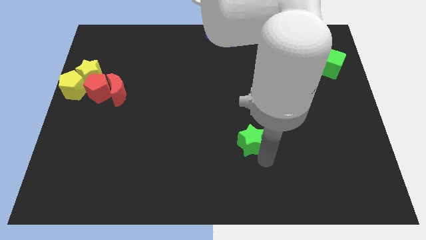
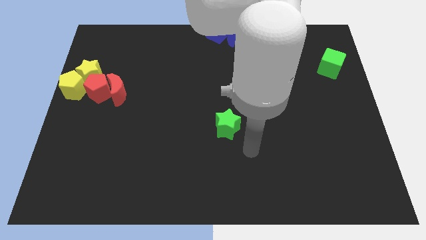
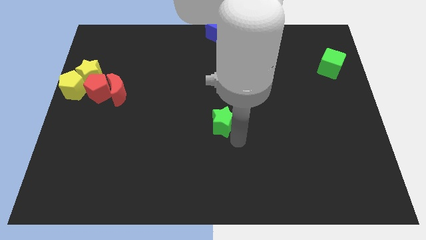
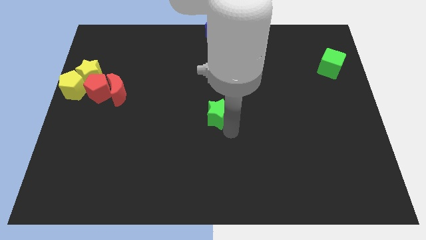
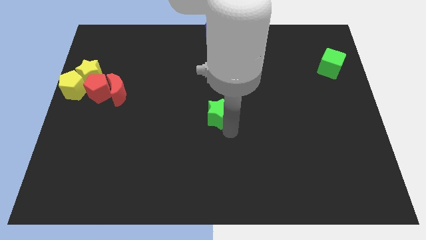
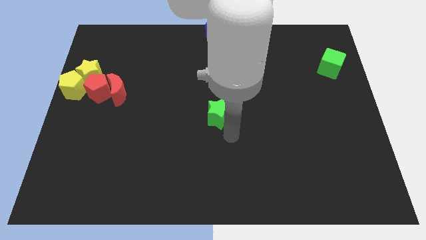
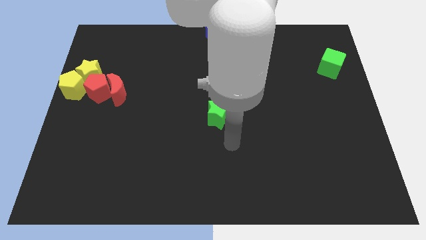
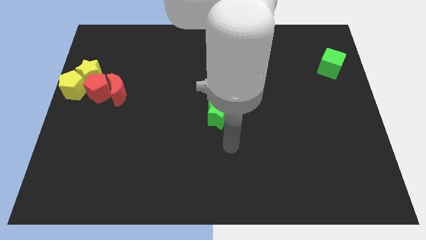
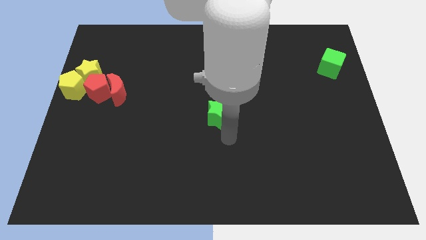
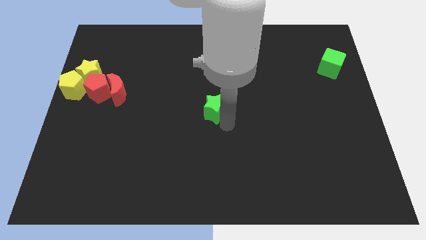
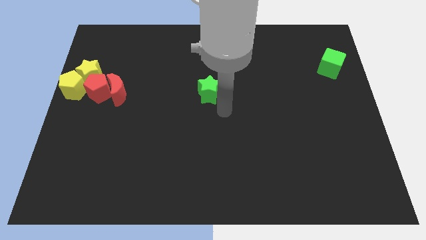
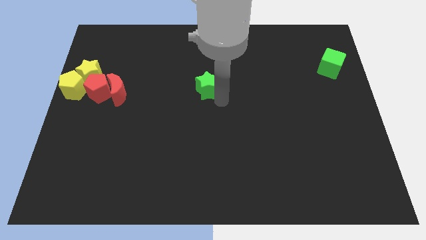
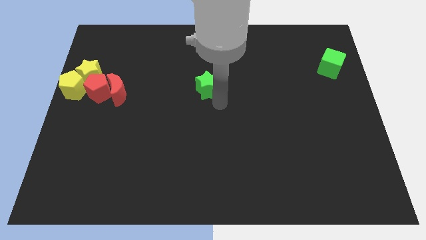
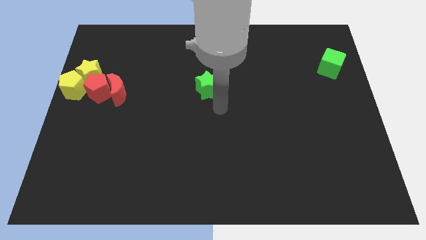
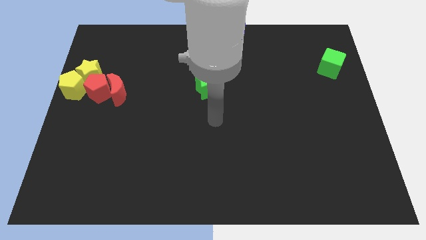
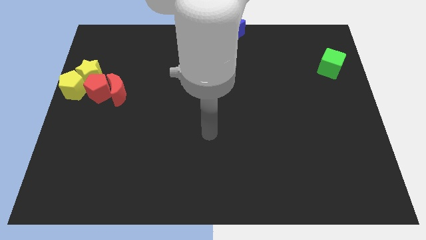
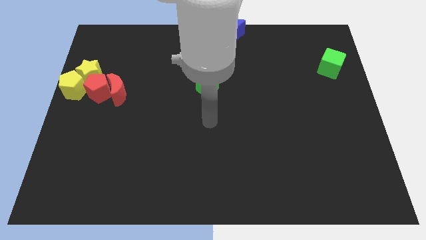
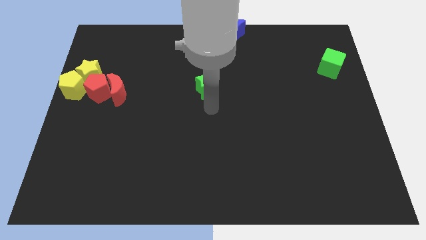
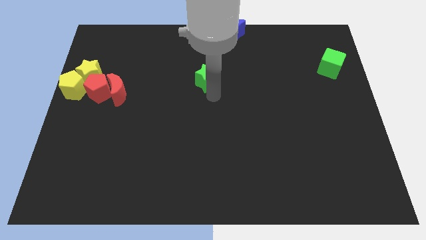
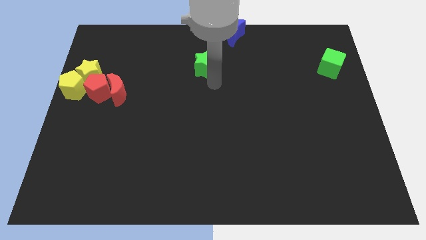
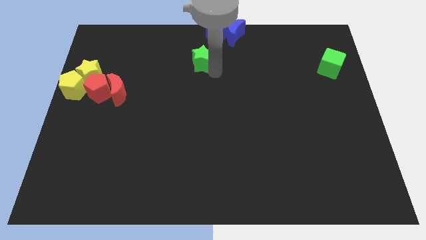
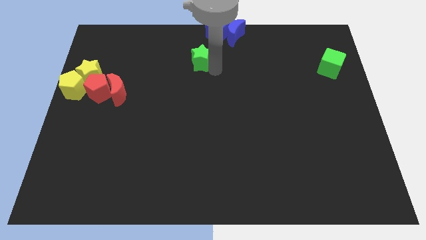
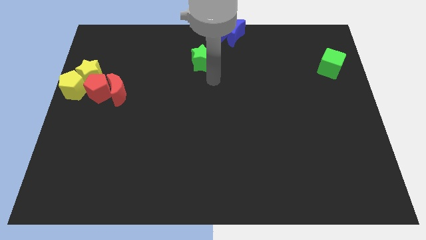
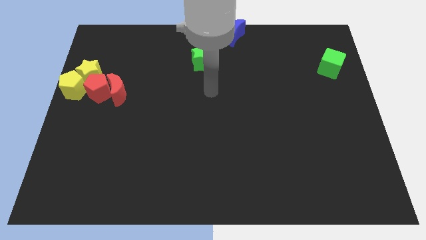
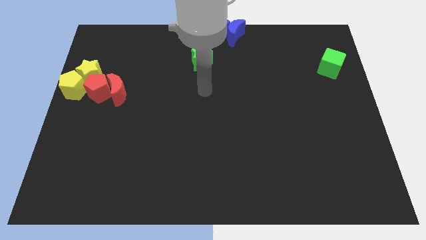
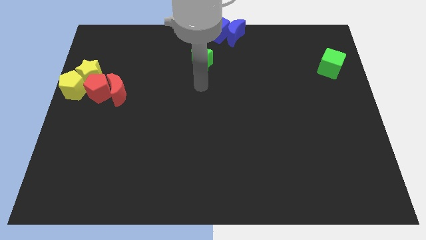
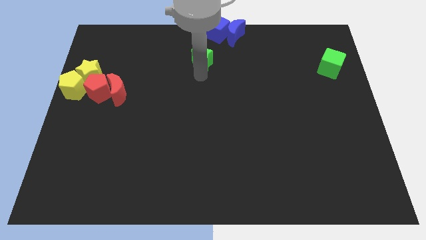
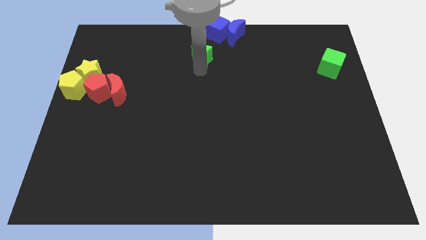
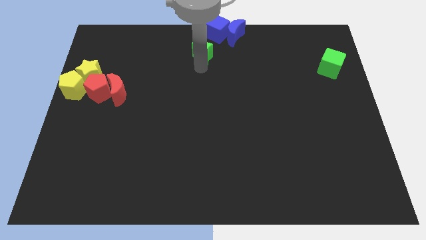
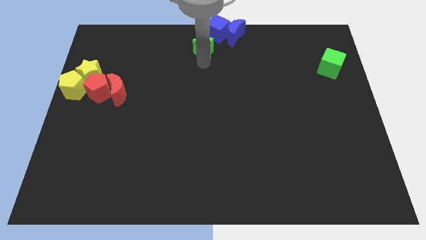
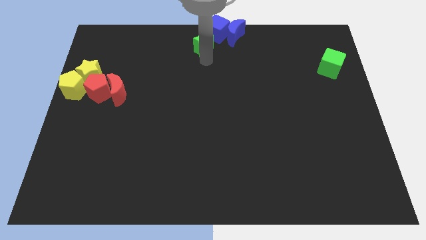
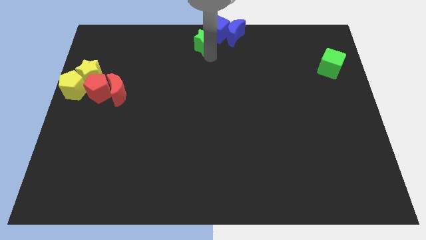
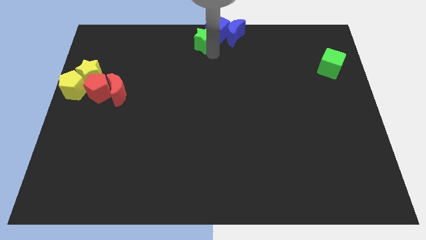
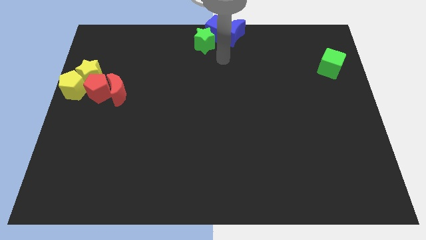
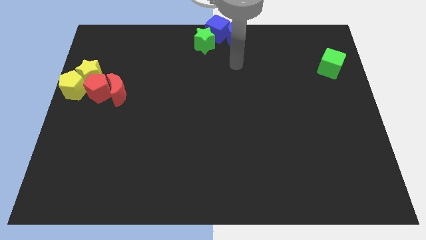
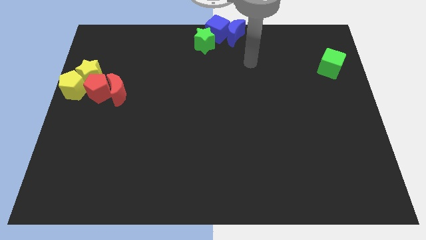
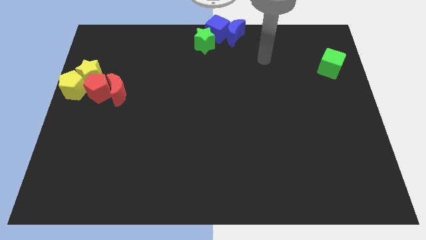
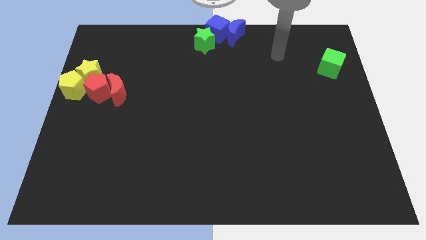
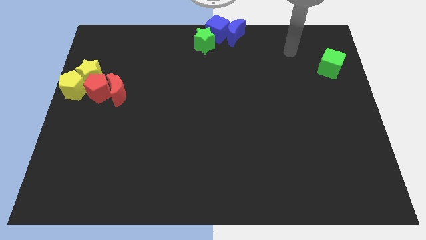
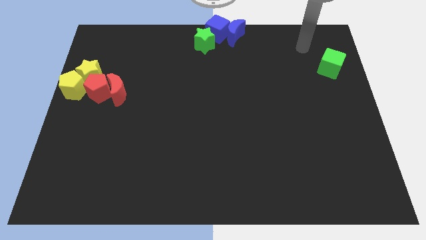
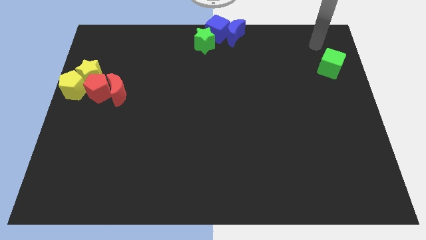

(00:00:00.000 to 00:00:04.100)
place green star to the bottom side of the blue cube

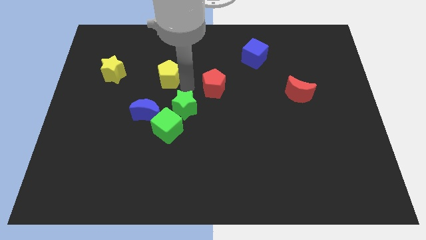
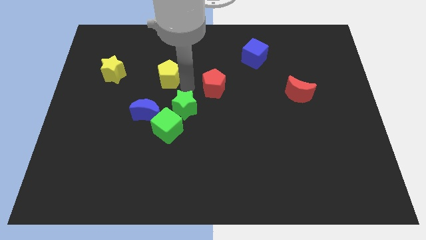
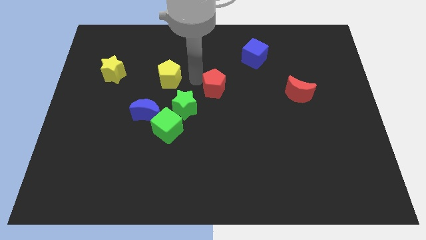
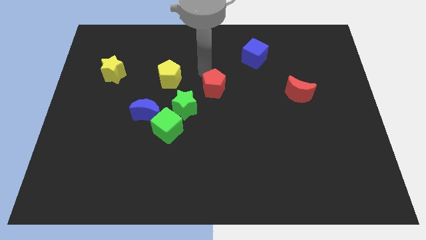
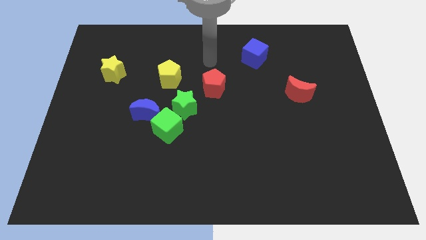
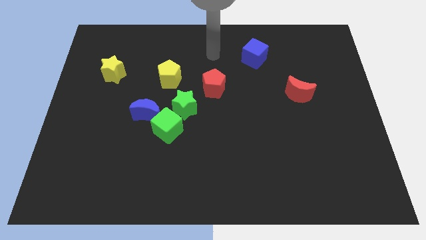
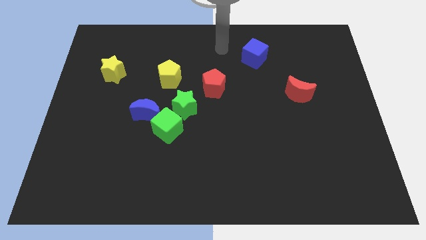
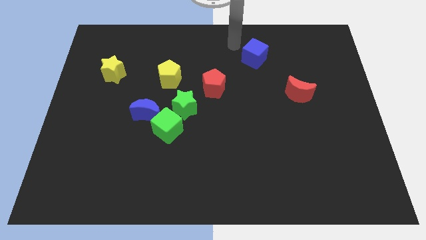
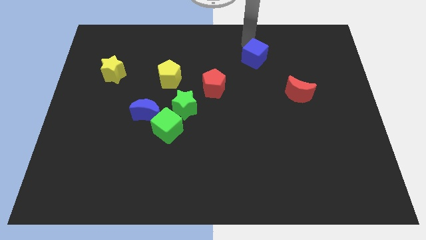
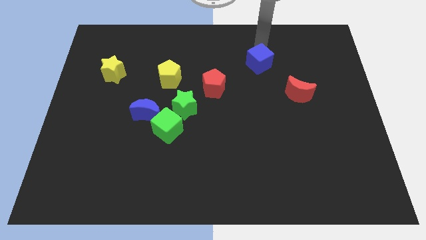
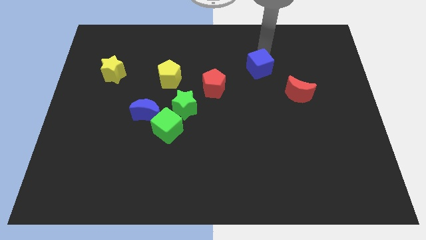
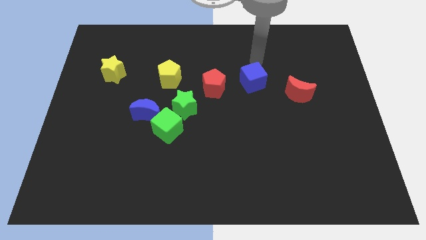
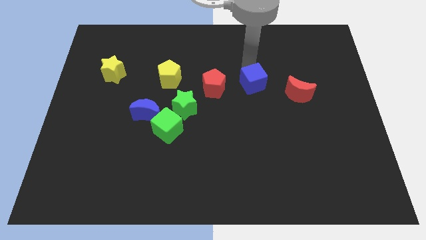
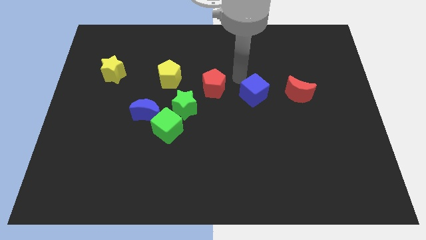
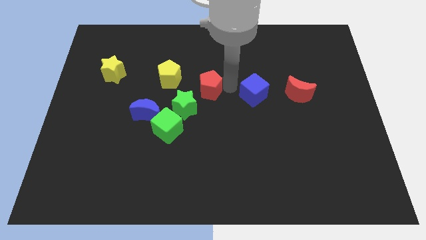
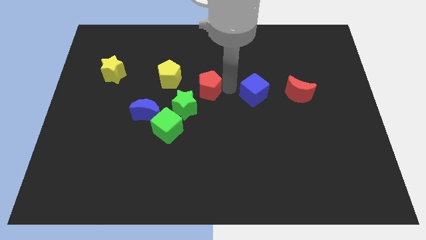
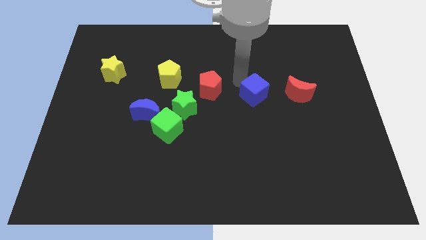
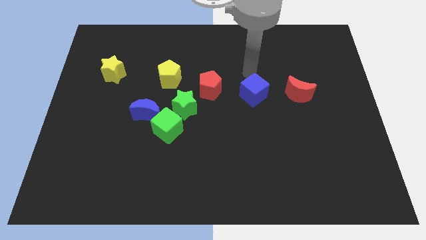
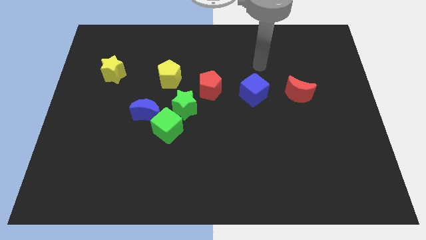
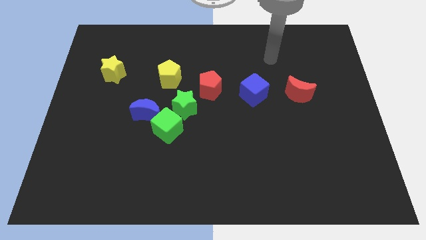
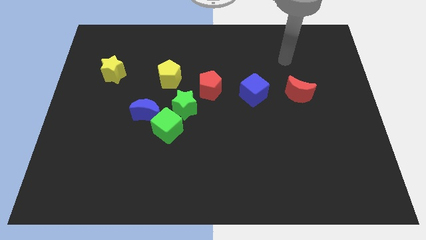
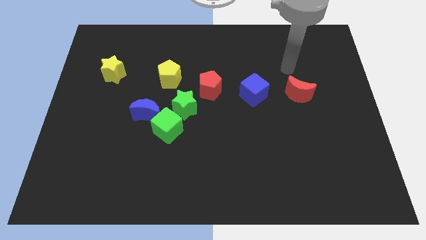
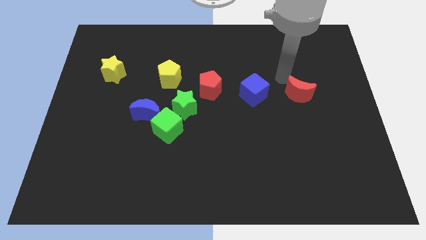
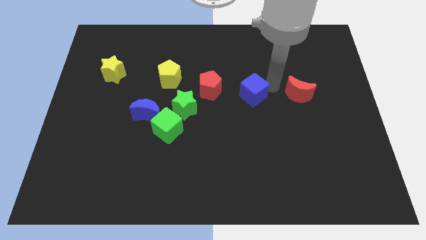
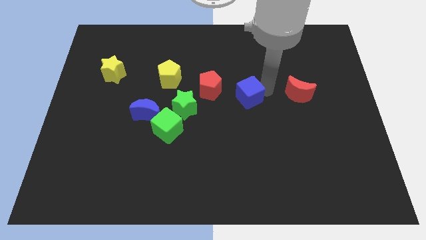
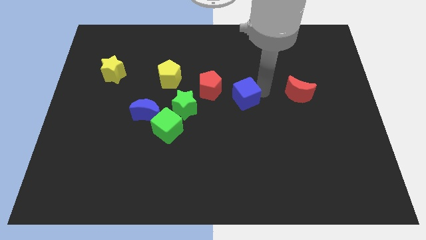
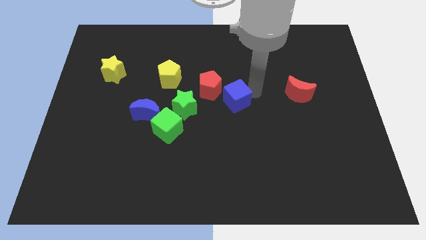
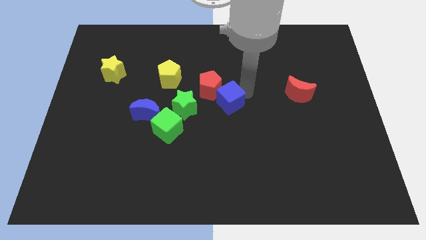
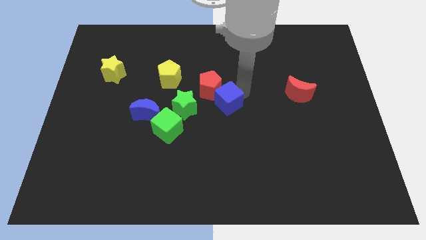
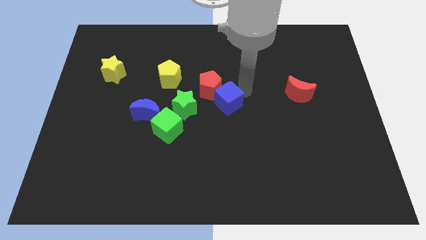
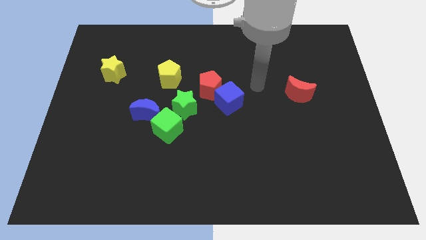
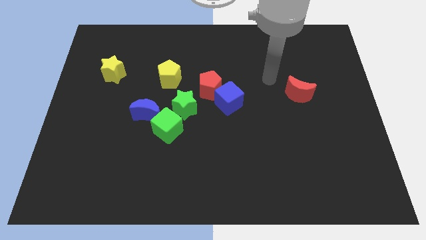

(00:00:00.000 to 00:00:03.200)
place the blue cube close to the red pentagon

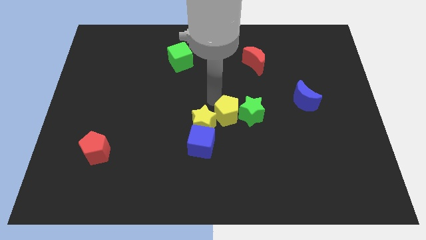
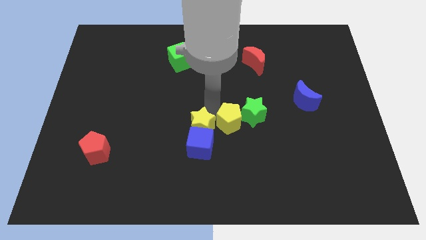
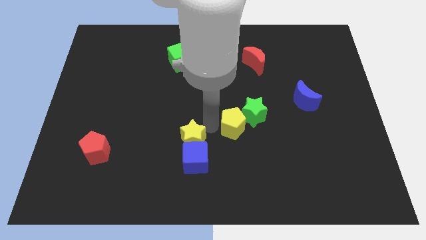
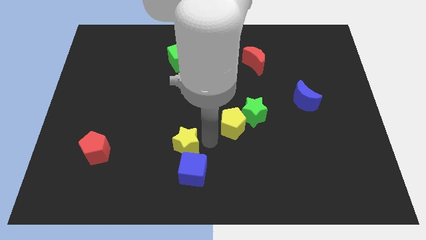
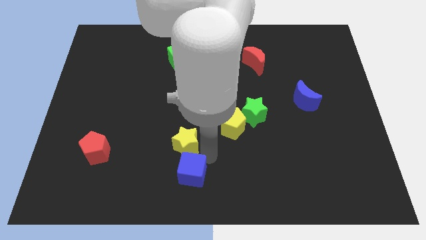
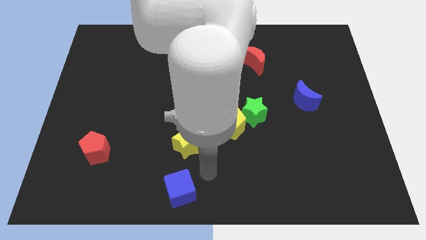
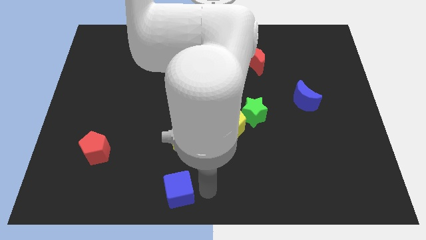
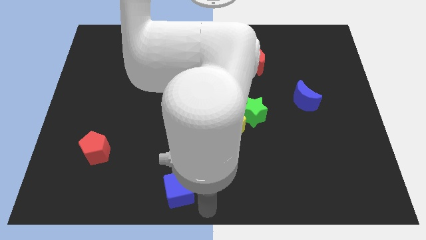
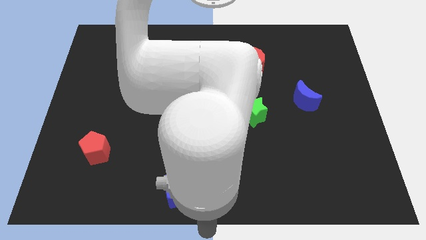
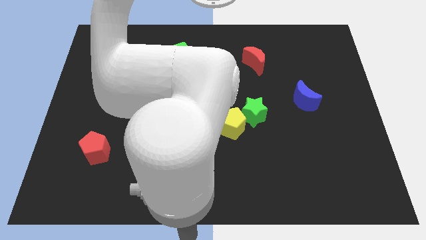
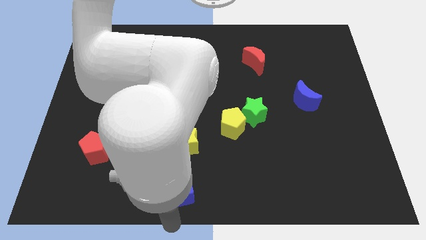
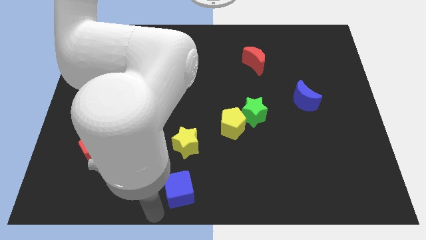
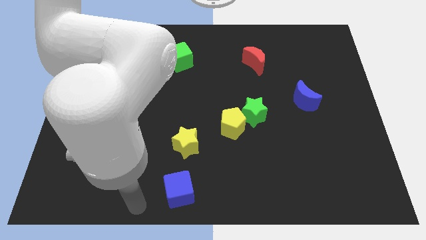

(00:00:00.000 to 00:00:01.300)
separate the yellow star and blue cube

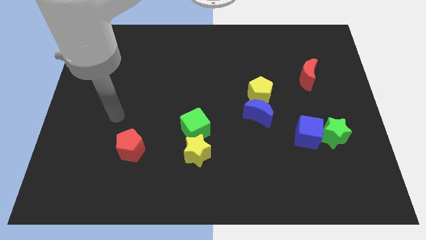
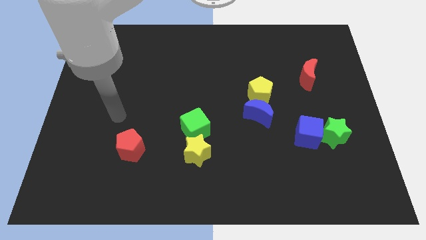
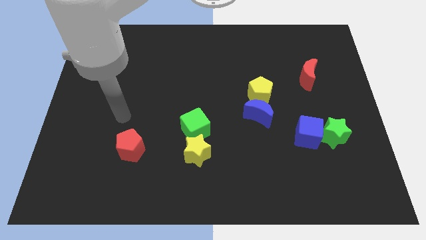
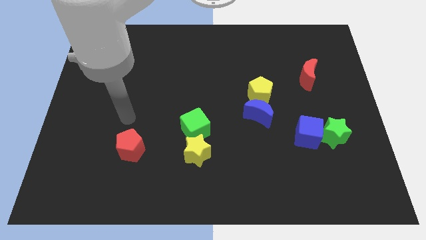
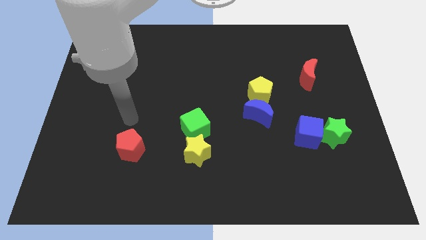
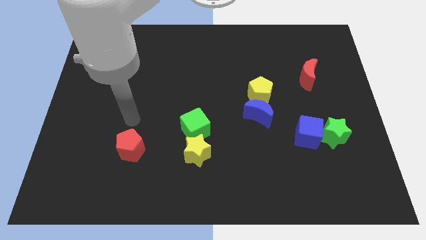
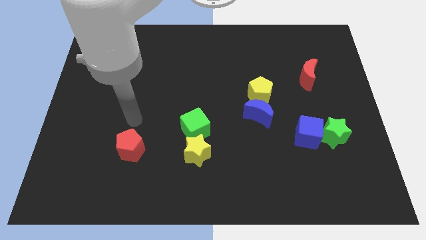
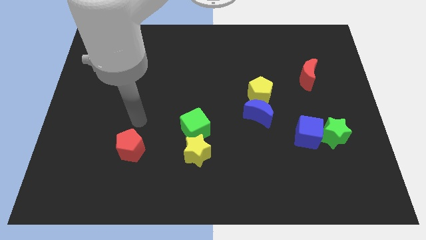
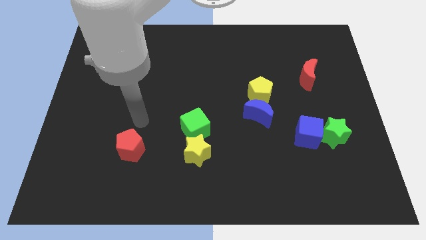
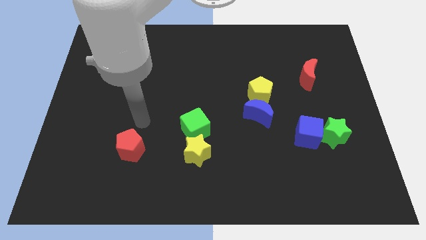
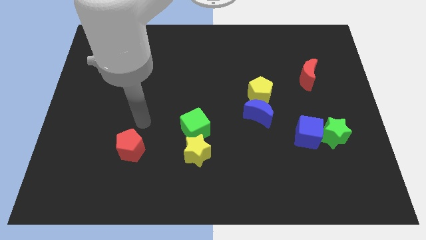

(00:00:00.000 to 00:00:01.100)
put your hand vertically above the red pentagon
